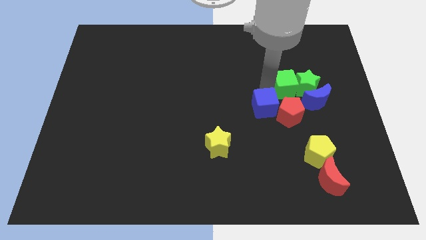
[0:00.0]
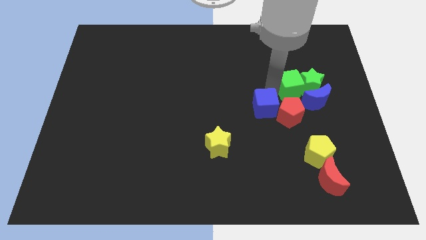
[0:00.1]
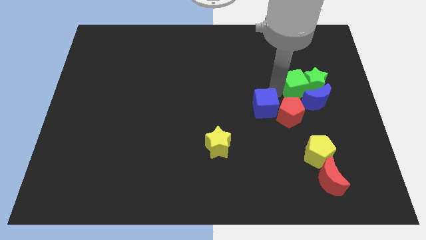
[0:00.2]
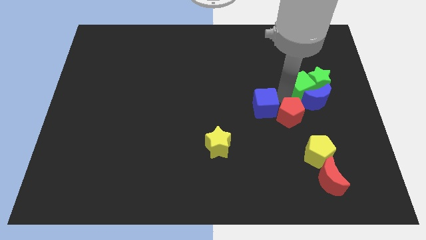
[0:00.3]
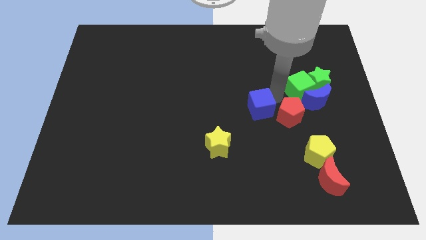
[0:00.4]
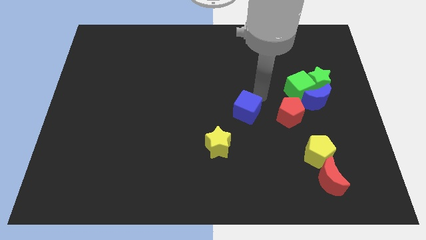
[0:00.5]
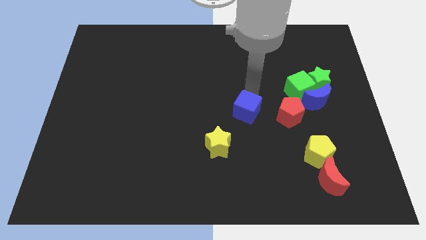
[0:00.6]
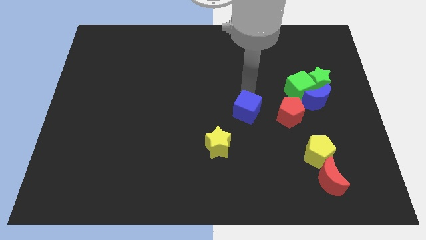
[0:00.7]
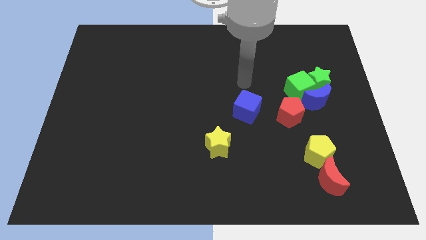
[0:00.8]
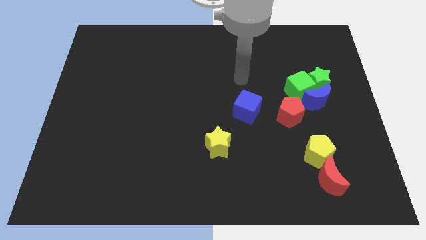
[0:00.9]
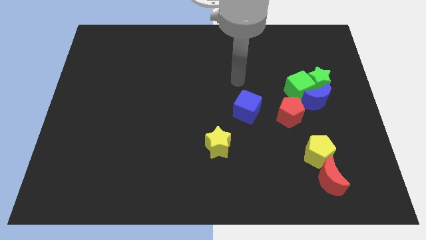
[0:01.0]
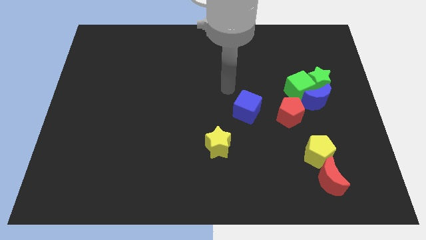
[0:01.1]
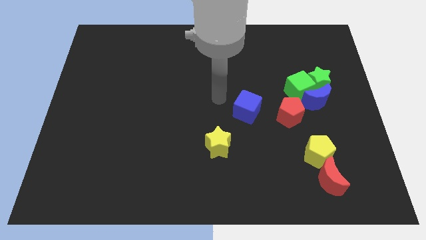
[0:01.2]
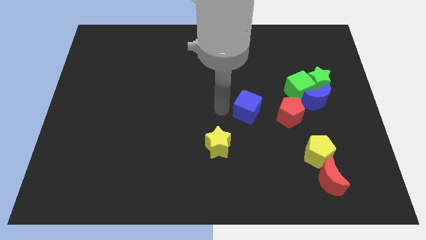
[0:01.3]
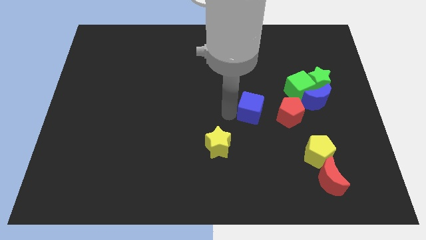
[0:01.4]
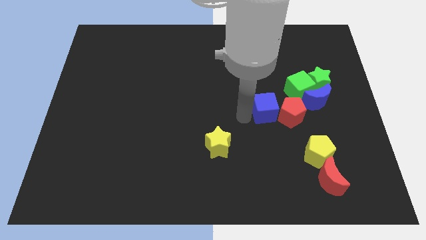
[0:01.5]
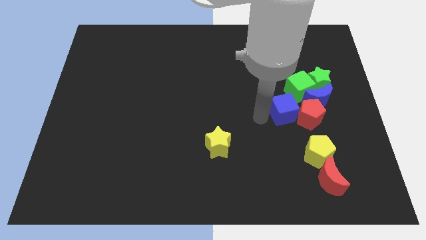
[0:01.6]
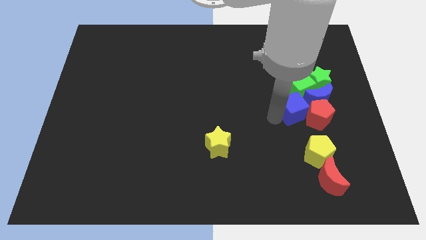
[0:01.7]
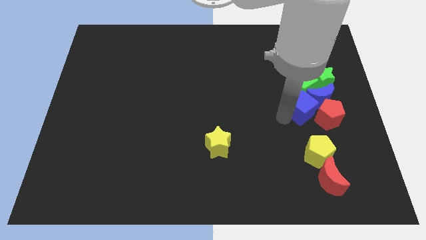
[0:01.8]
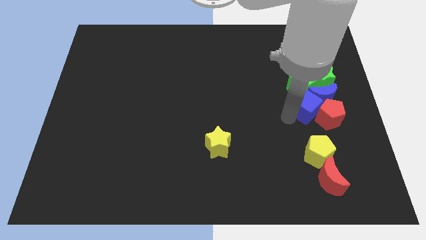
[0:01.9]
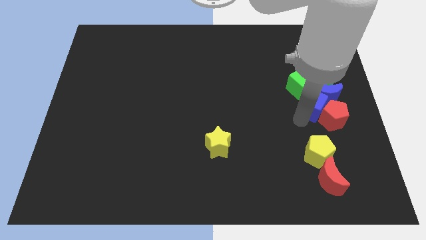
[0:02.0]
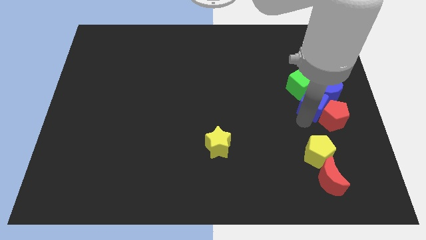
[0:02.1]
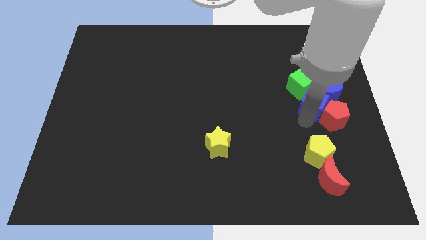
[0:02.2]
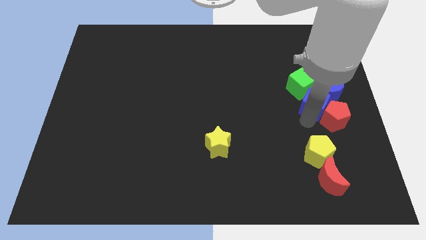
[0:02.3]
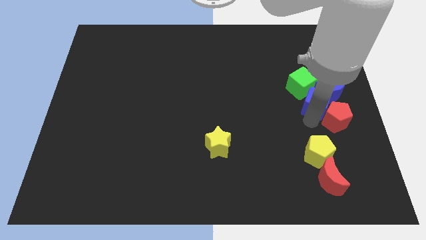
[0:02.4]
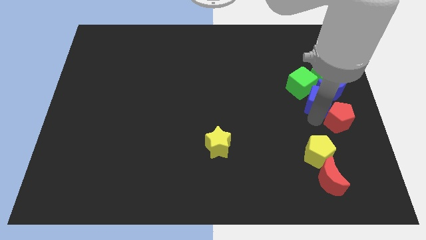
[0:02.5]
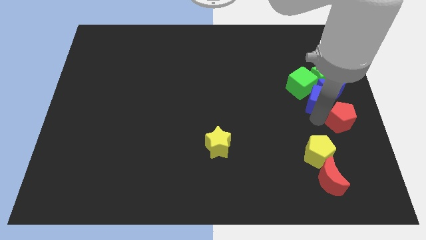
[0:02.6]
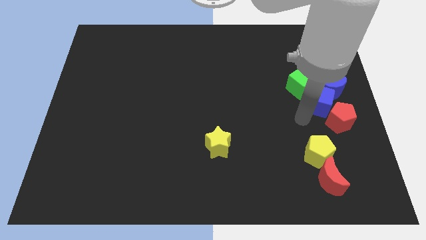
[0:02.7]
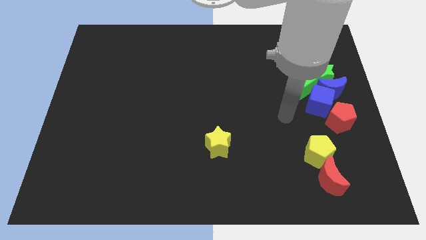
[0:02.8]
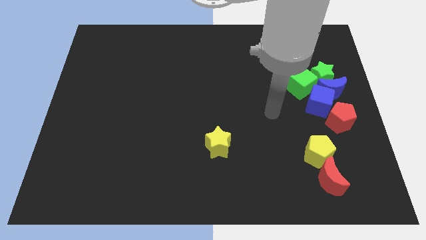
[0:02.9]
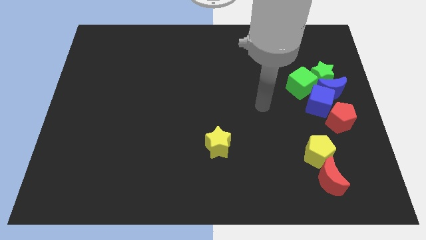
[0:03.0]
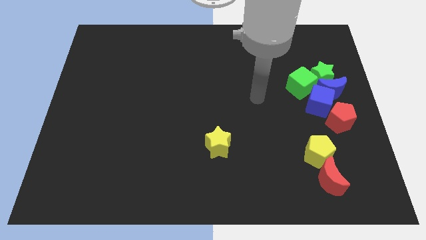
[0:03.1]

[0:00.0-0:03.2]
push the blue cube into blue moon

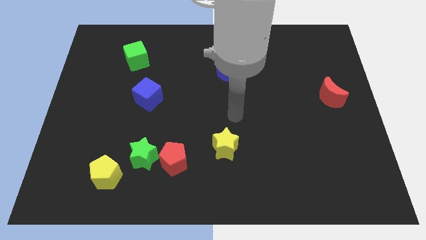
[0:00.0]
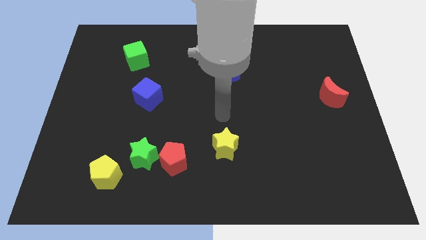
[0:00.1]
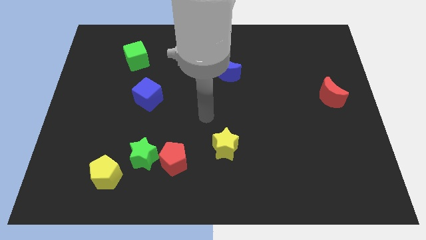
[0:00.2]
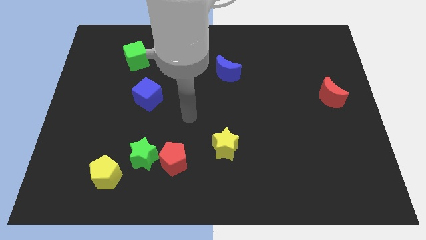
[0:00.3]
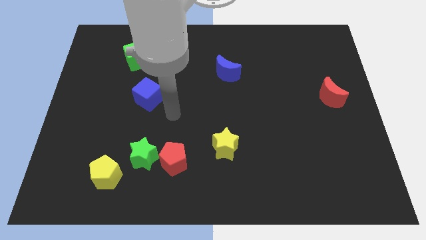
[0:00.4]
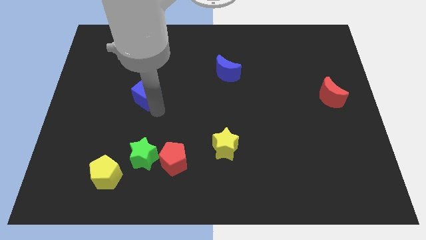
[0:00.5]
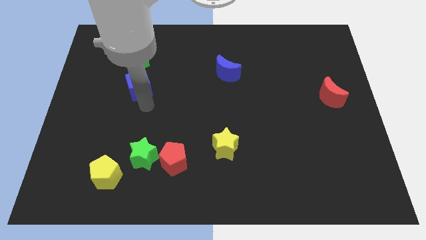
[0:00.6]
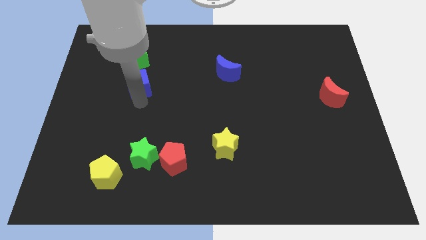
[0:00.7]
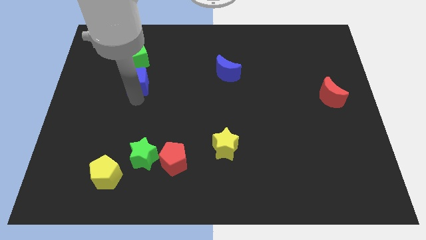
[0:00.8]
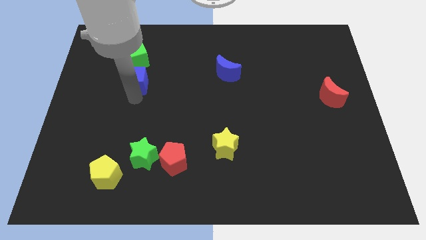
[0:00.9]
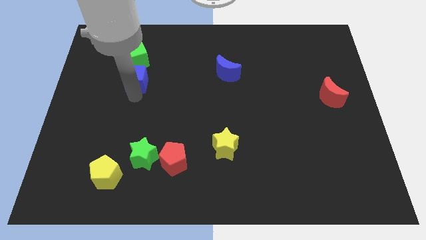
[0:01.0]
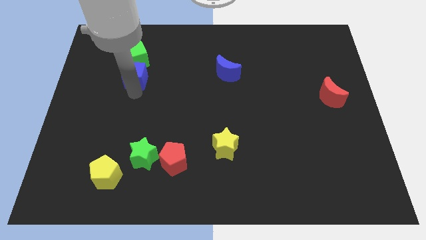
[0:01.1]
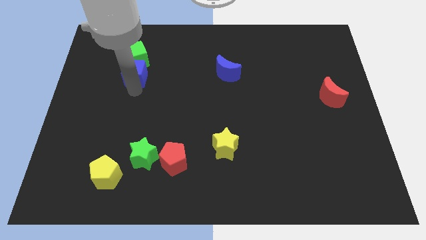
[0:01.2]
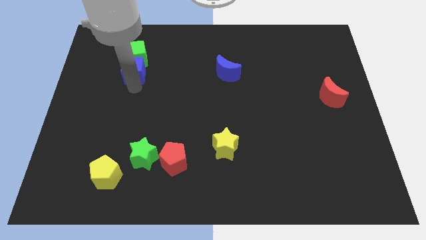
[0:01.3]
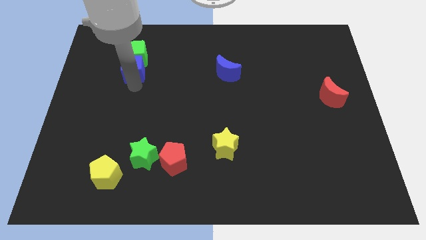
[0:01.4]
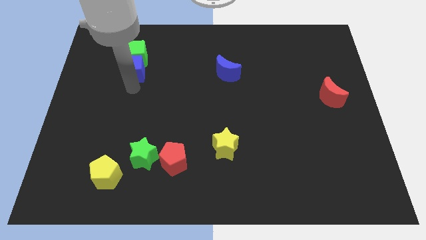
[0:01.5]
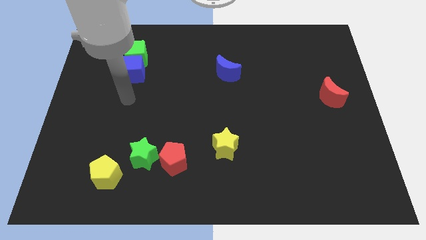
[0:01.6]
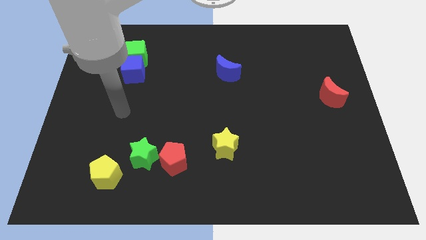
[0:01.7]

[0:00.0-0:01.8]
push the blue cube into the green cube

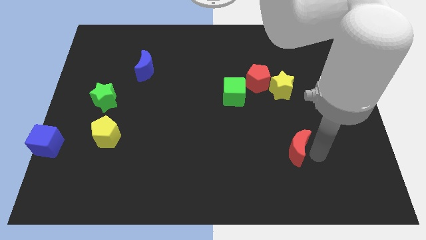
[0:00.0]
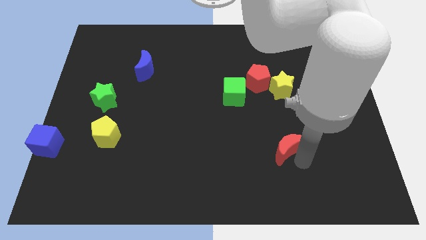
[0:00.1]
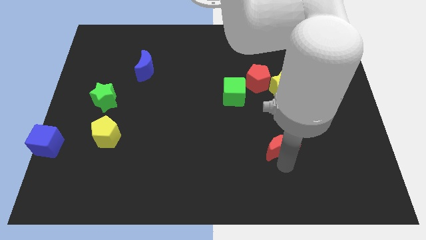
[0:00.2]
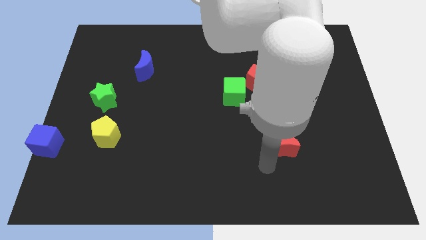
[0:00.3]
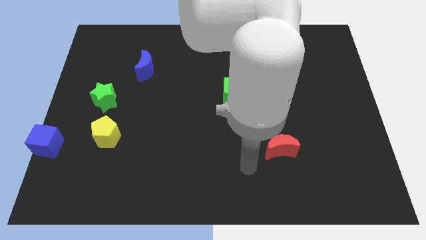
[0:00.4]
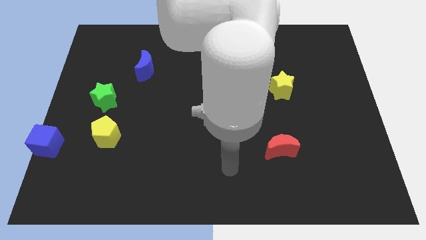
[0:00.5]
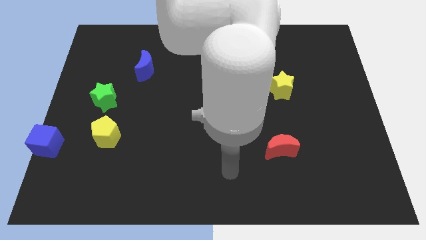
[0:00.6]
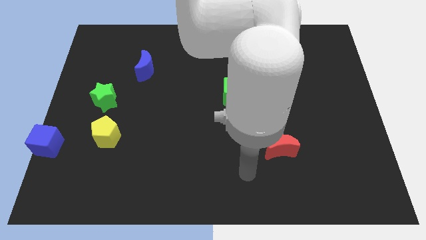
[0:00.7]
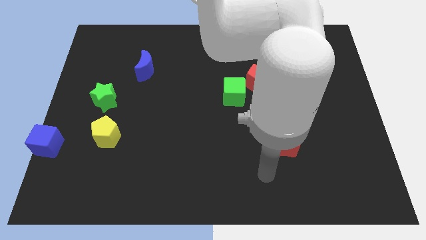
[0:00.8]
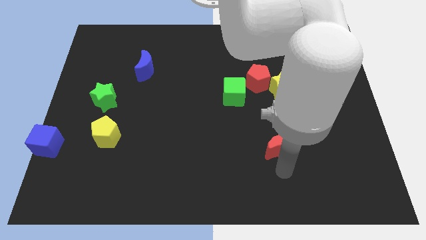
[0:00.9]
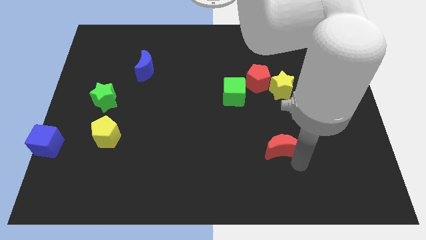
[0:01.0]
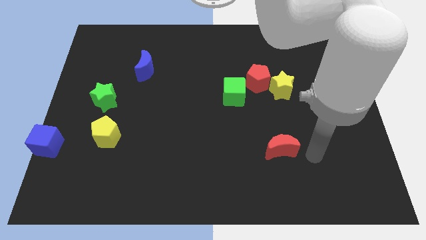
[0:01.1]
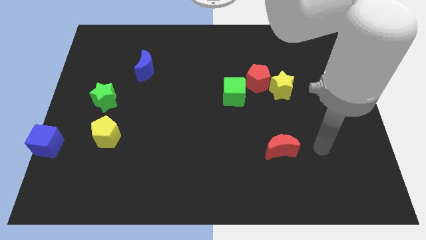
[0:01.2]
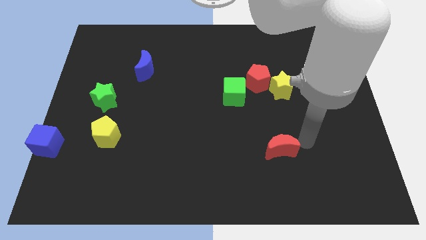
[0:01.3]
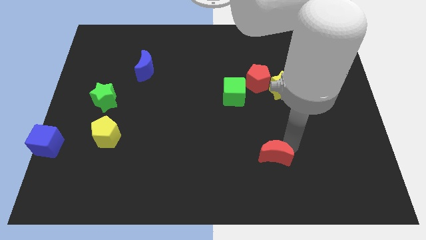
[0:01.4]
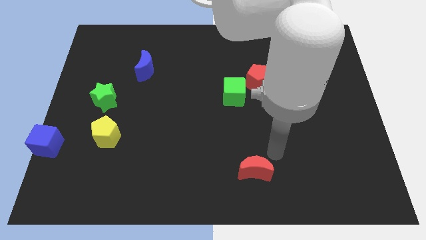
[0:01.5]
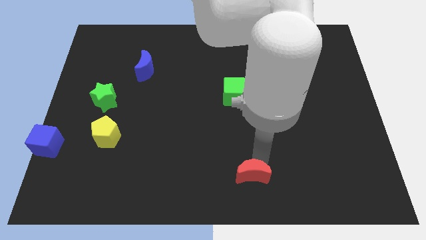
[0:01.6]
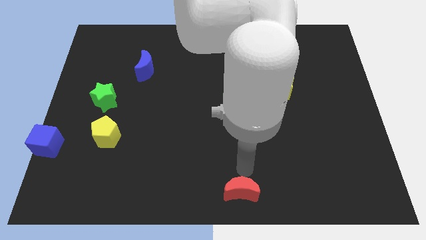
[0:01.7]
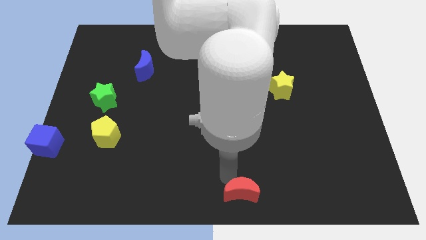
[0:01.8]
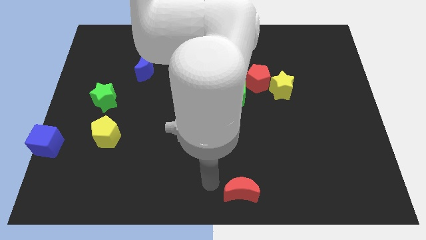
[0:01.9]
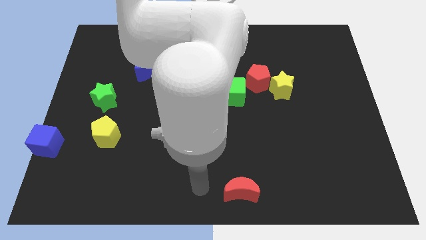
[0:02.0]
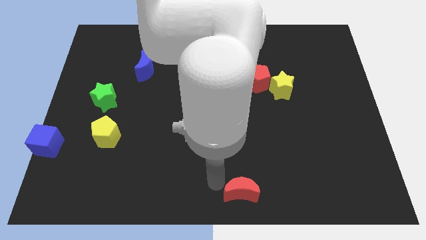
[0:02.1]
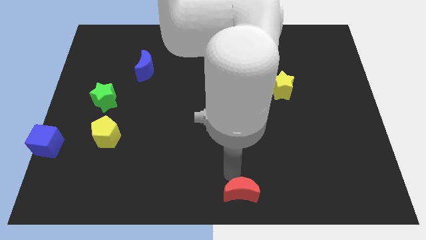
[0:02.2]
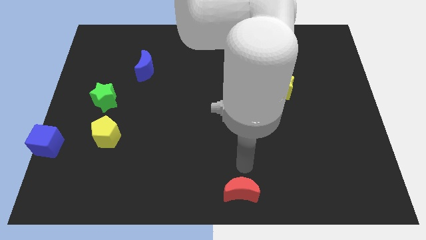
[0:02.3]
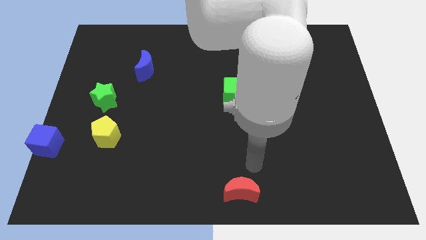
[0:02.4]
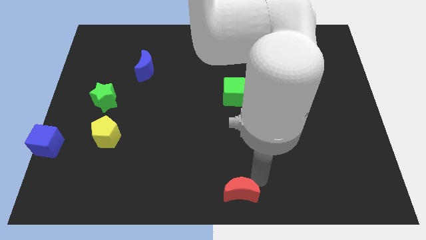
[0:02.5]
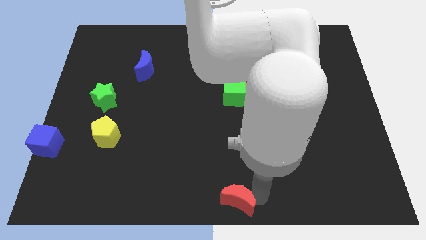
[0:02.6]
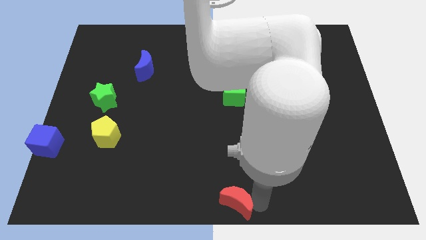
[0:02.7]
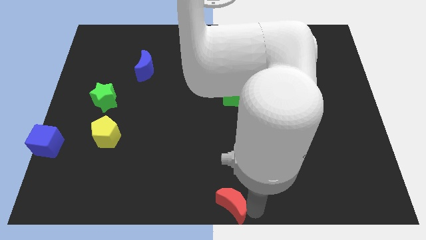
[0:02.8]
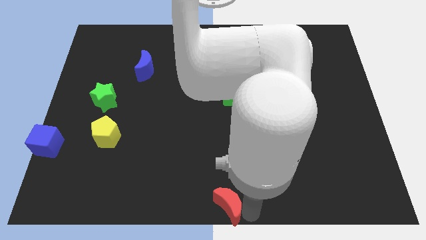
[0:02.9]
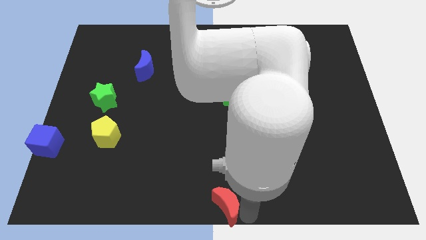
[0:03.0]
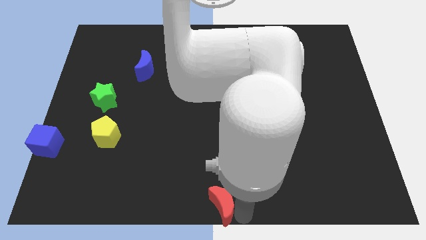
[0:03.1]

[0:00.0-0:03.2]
place red moon in the bottom center

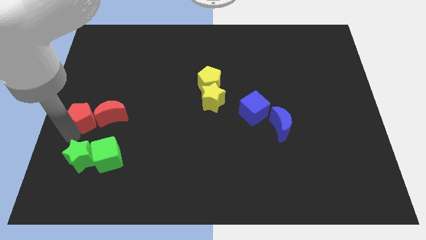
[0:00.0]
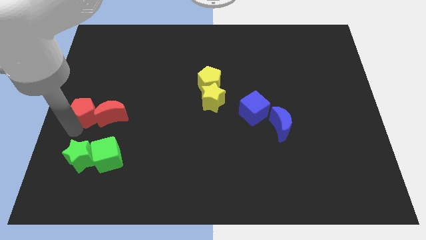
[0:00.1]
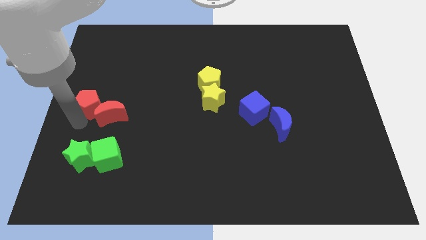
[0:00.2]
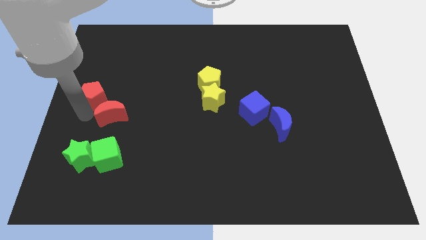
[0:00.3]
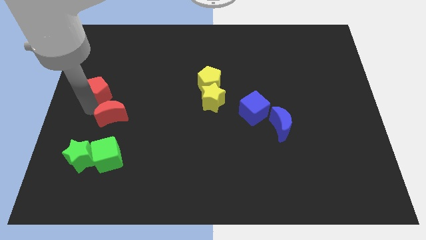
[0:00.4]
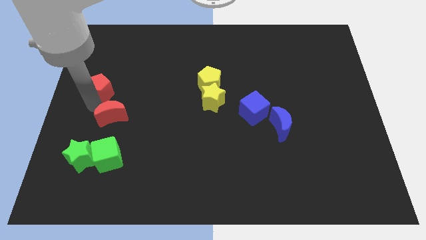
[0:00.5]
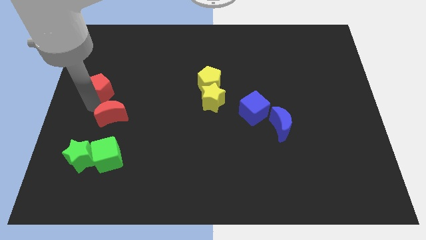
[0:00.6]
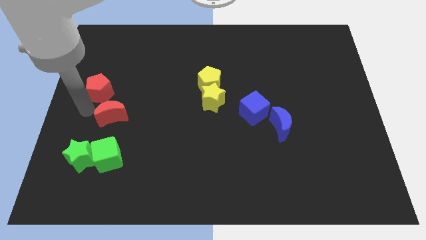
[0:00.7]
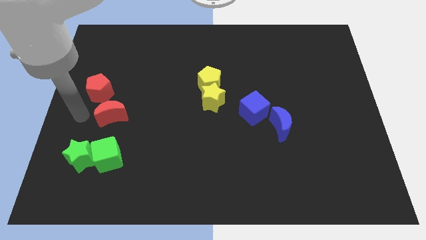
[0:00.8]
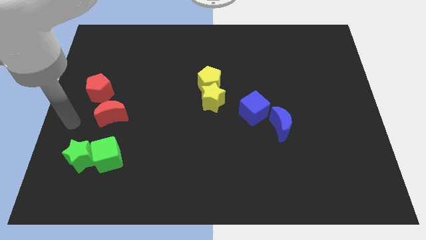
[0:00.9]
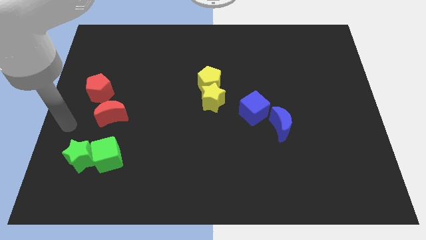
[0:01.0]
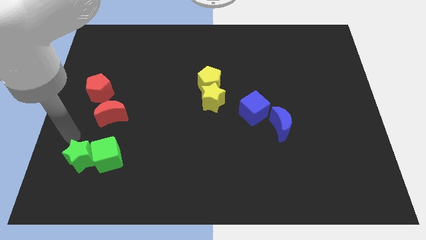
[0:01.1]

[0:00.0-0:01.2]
separate the red crescent and the red pentagon
